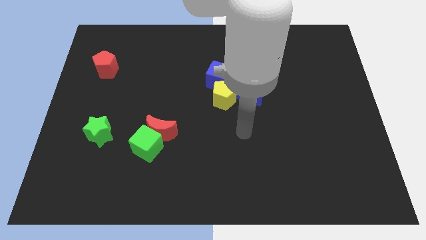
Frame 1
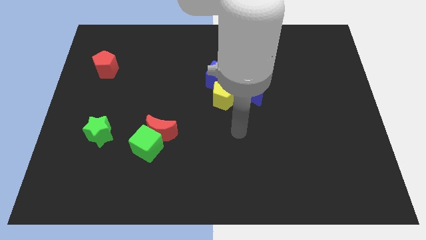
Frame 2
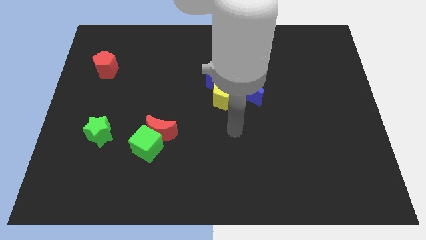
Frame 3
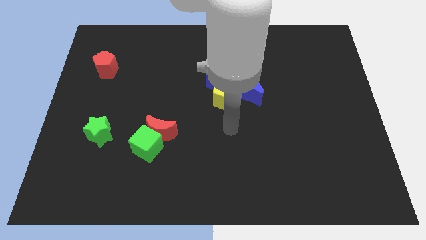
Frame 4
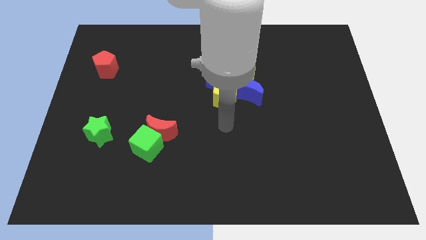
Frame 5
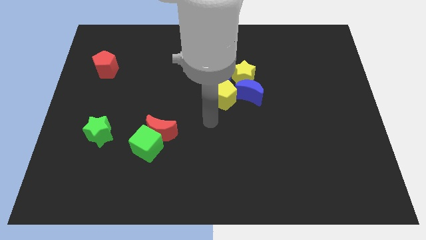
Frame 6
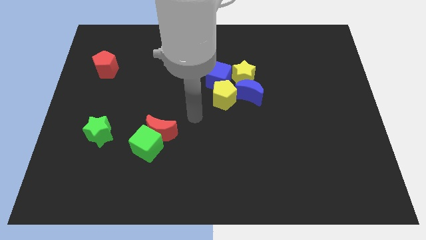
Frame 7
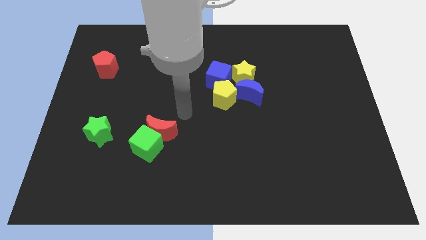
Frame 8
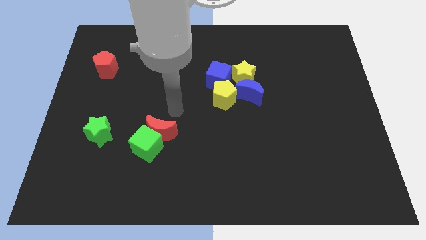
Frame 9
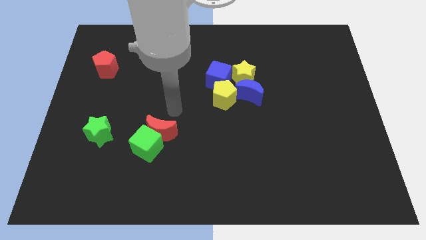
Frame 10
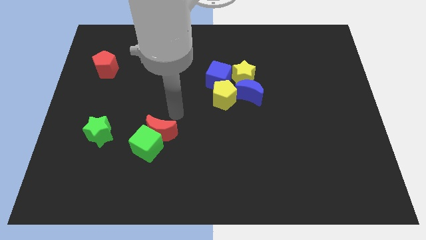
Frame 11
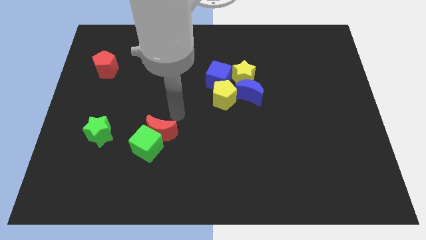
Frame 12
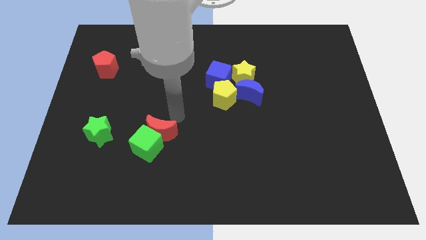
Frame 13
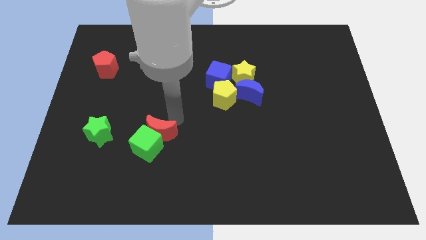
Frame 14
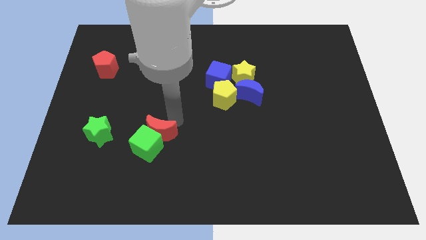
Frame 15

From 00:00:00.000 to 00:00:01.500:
place the arm above the red moon

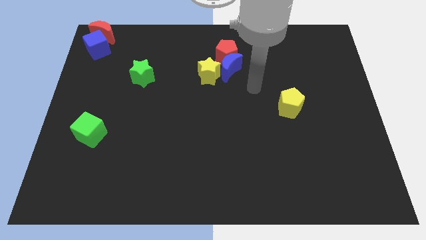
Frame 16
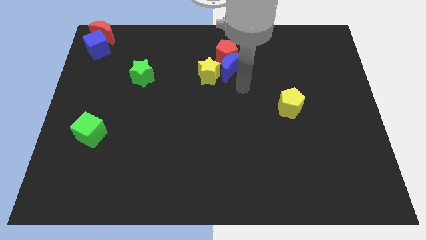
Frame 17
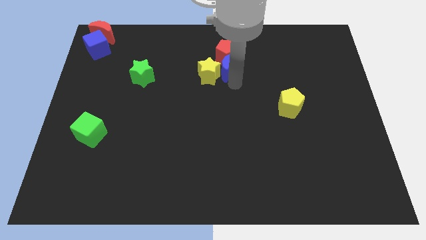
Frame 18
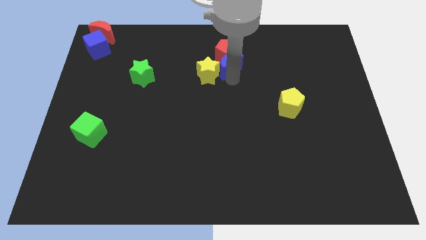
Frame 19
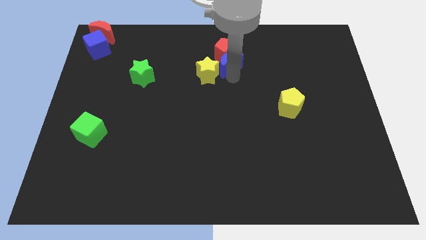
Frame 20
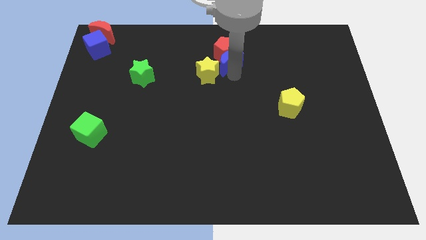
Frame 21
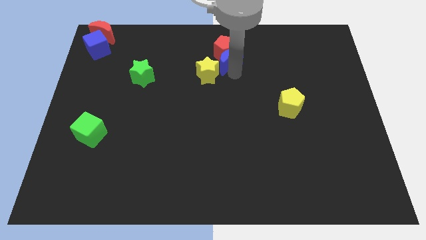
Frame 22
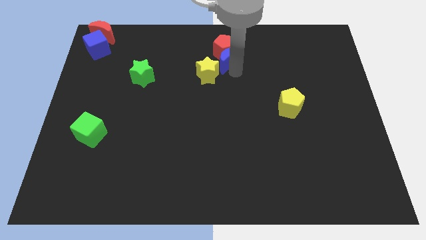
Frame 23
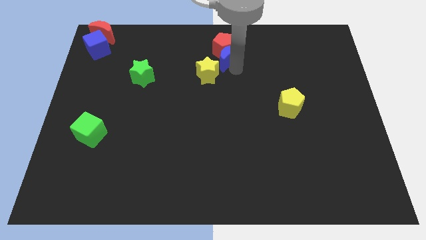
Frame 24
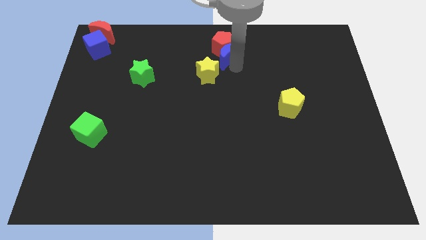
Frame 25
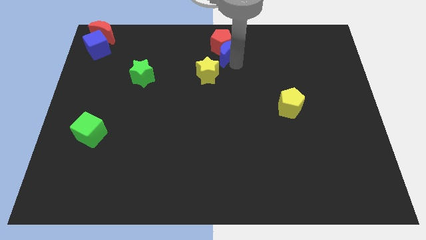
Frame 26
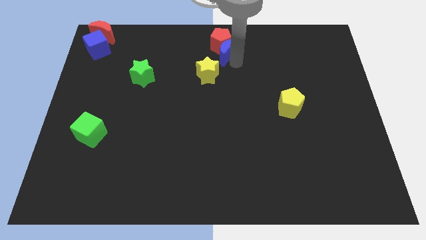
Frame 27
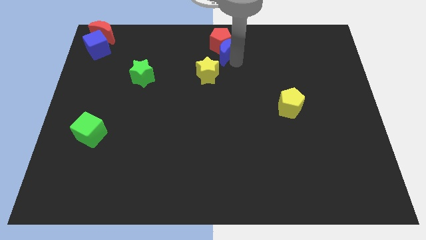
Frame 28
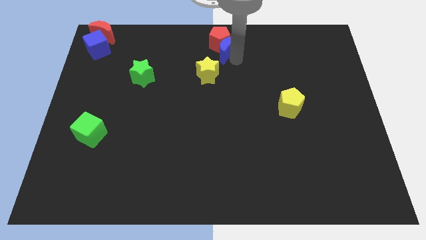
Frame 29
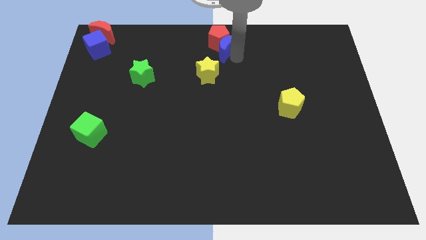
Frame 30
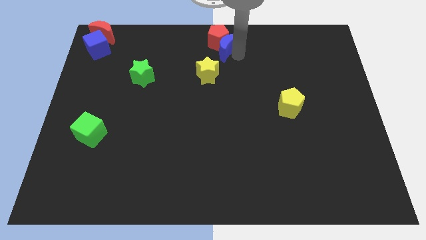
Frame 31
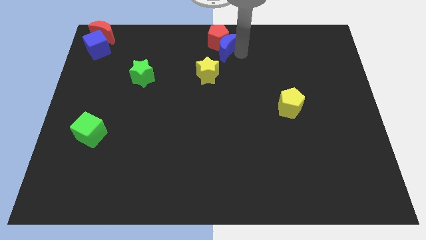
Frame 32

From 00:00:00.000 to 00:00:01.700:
separate the red pentagon and blue crescent from yellow star

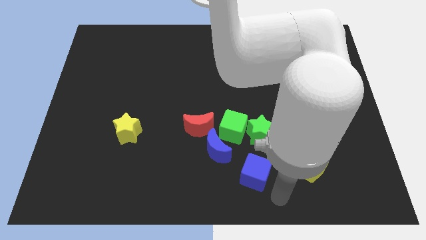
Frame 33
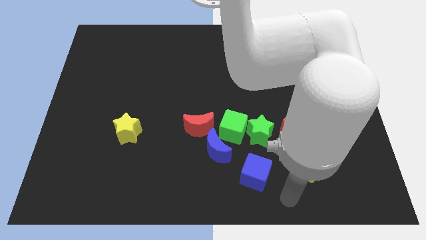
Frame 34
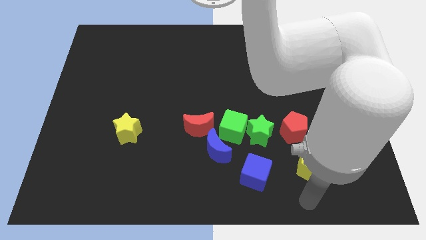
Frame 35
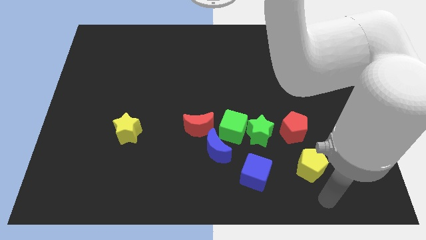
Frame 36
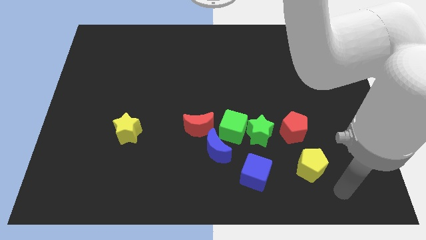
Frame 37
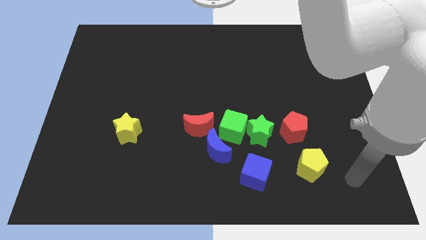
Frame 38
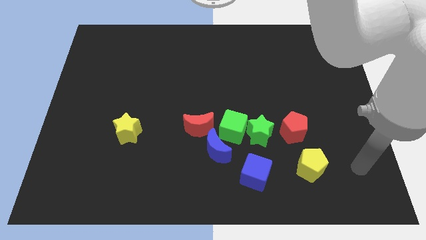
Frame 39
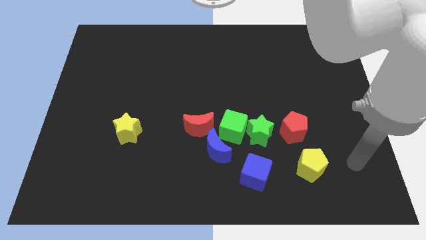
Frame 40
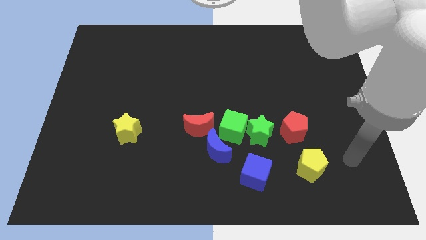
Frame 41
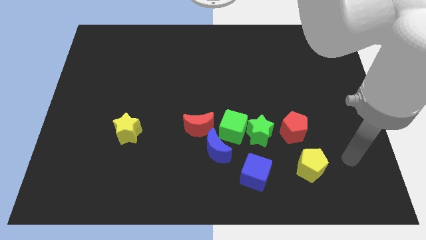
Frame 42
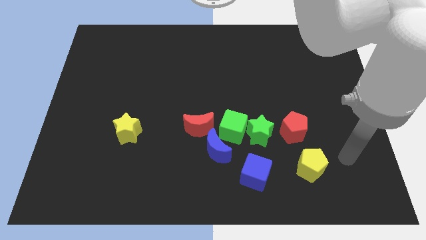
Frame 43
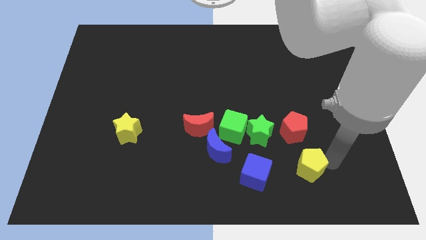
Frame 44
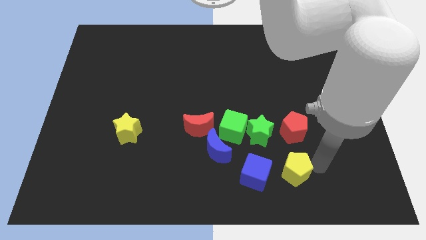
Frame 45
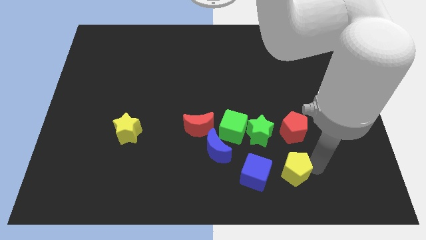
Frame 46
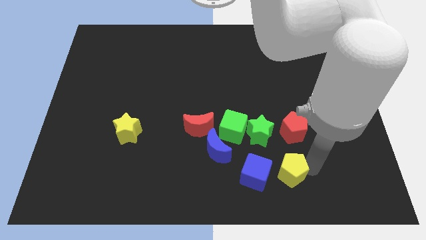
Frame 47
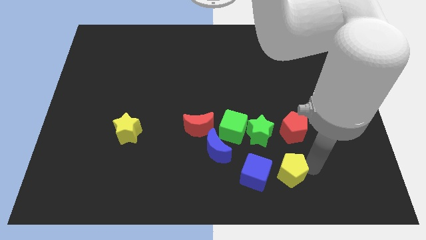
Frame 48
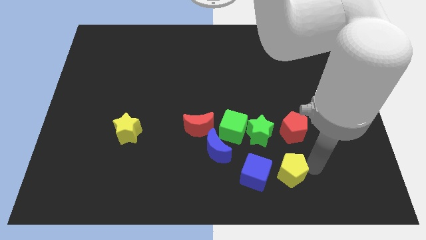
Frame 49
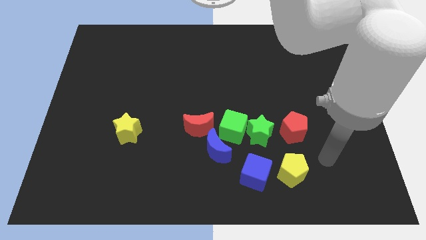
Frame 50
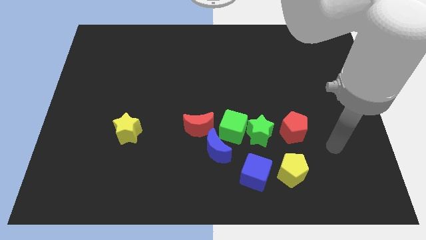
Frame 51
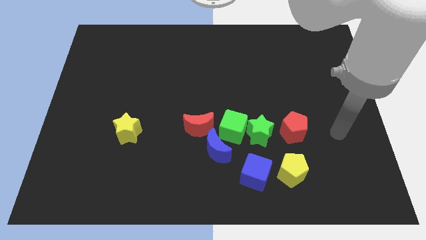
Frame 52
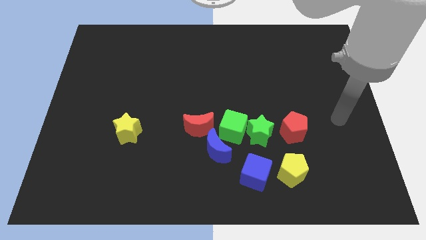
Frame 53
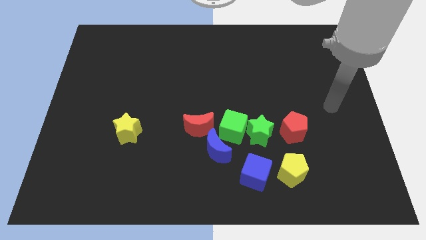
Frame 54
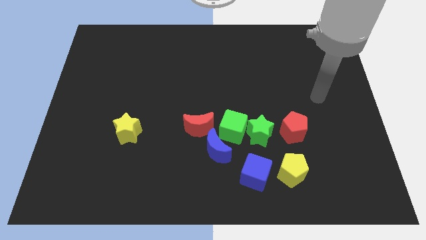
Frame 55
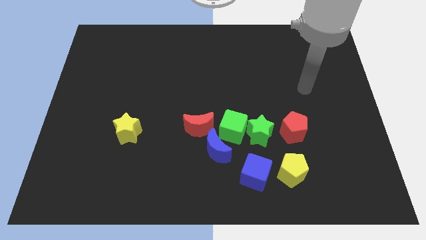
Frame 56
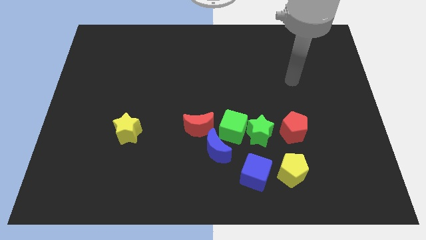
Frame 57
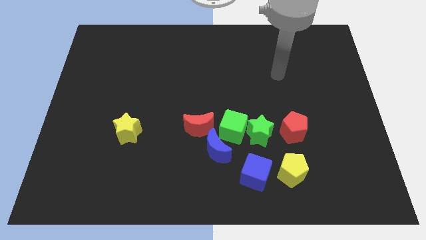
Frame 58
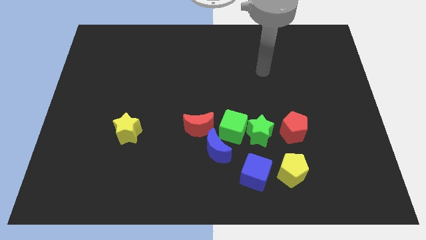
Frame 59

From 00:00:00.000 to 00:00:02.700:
move the yellow pentagon right to the blue cube

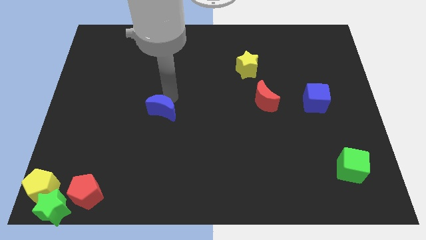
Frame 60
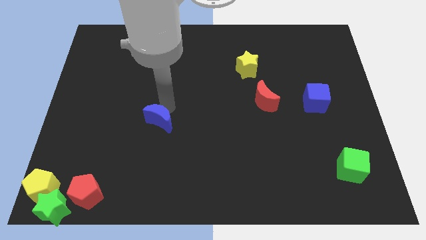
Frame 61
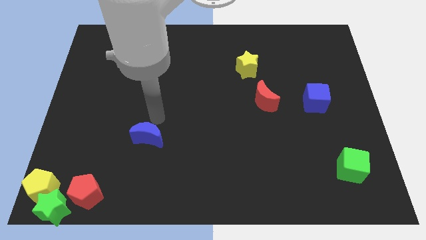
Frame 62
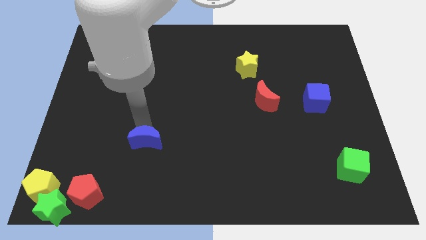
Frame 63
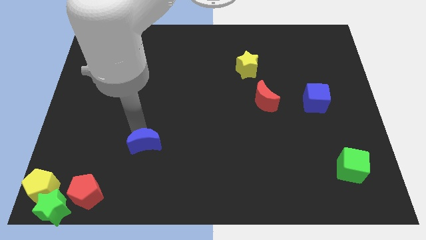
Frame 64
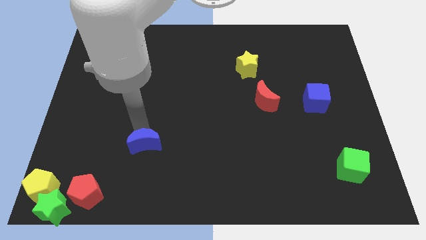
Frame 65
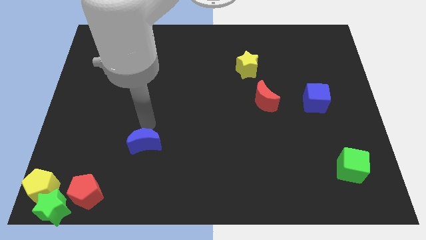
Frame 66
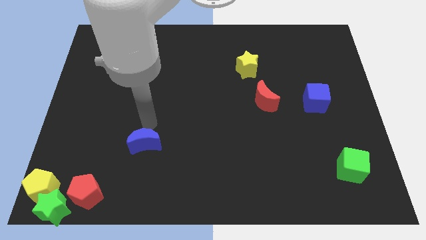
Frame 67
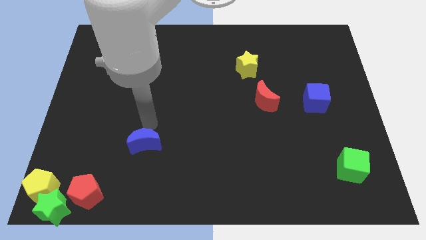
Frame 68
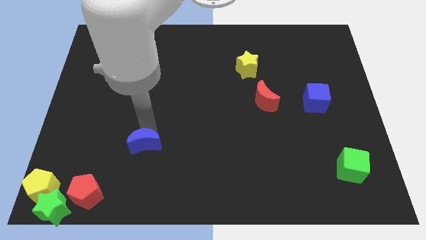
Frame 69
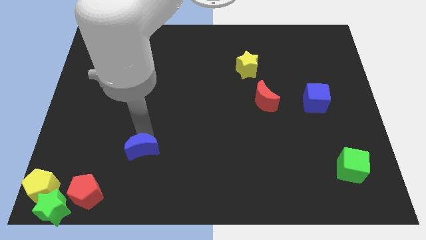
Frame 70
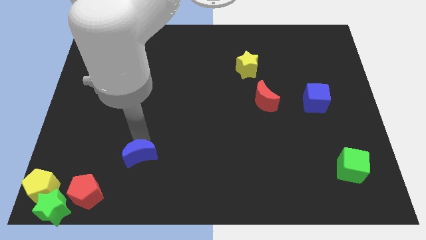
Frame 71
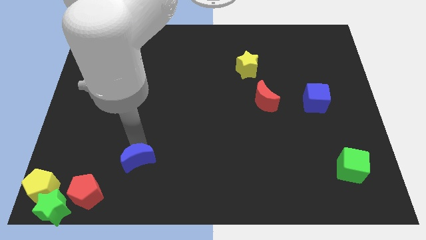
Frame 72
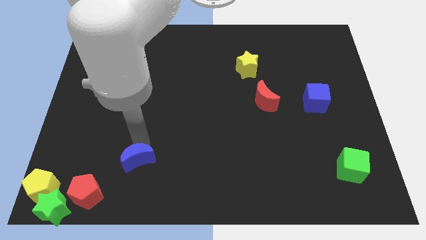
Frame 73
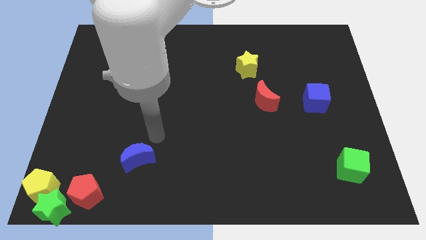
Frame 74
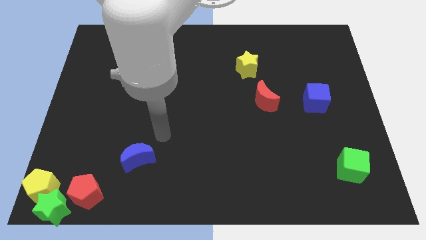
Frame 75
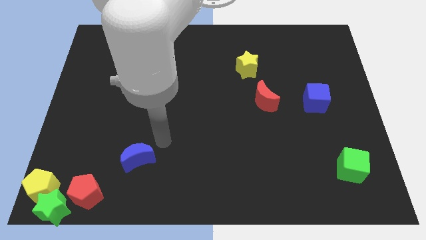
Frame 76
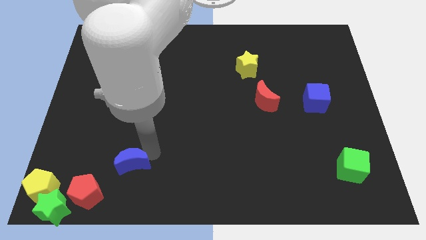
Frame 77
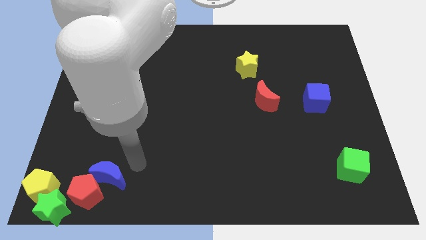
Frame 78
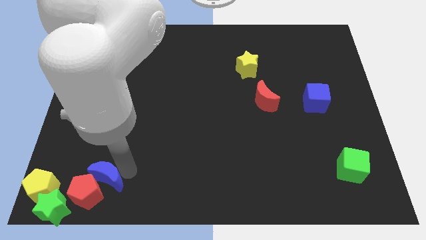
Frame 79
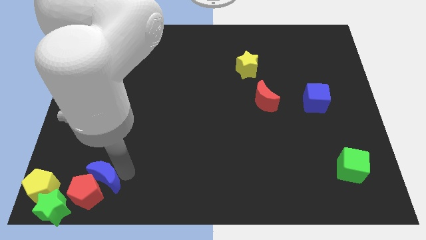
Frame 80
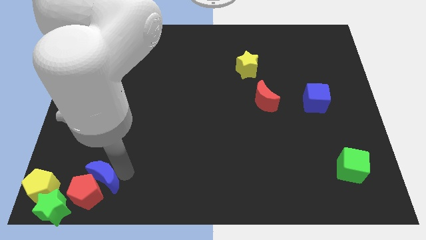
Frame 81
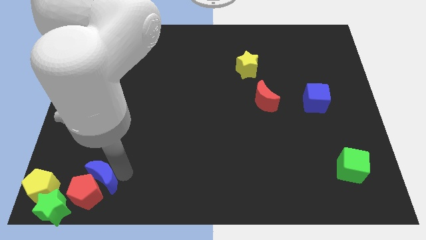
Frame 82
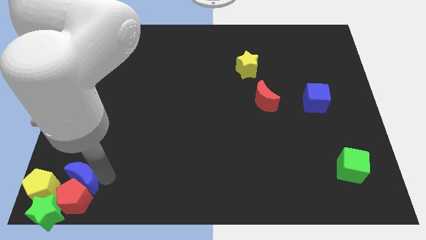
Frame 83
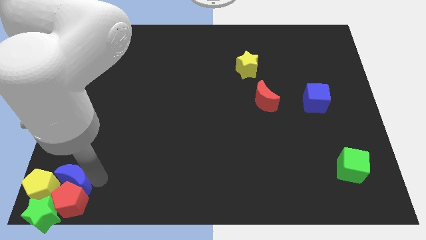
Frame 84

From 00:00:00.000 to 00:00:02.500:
push the blue moon into the red pentagon

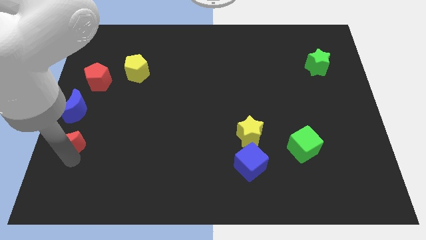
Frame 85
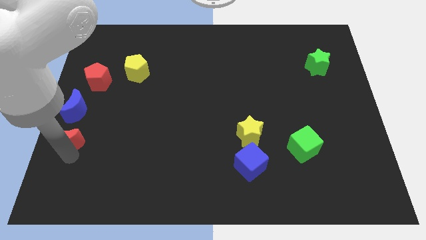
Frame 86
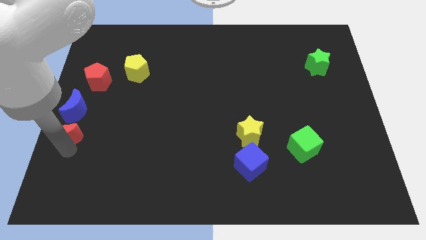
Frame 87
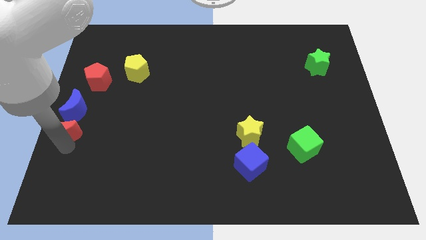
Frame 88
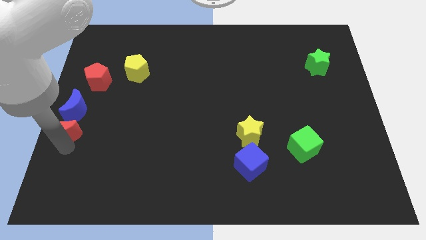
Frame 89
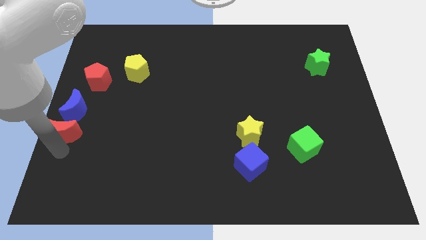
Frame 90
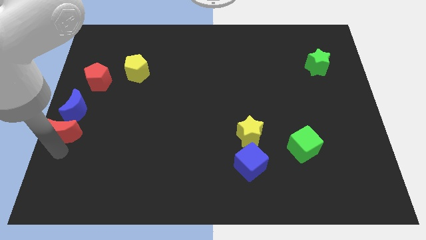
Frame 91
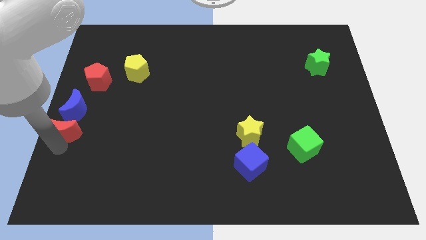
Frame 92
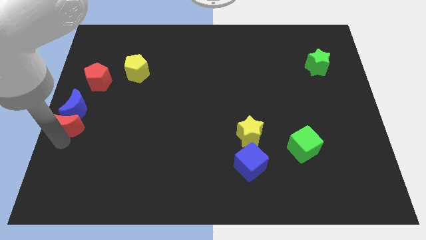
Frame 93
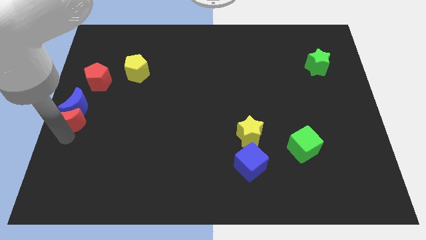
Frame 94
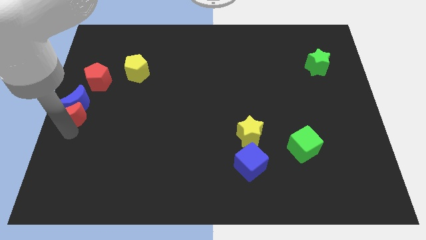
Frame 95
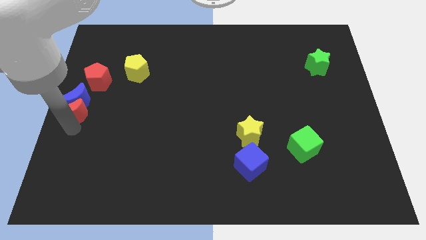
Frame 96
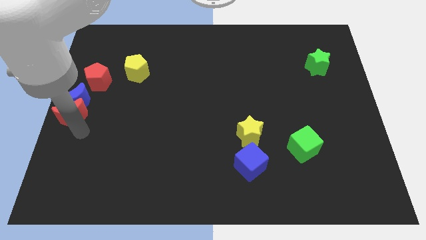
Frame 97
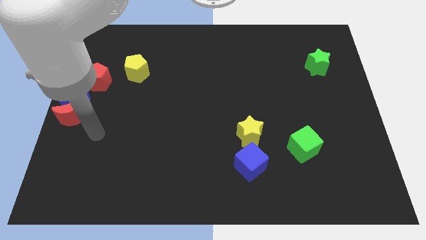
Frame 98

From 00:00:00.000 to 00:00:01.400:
push the red crescent into the blue crescent
